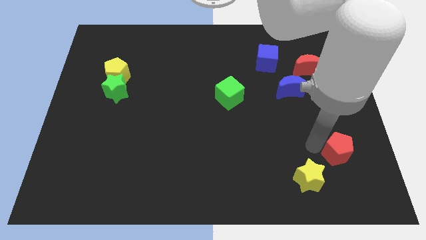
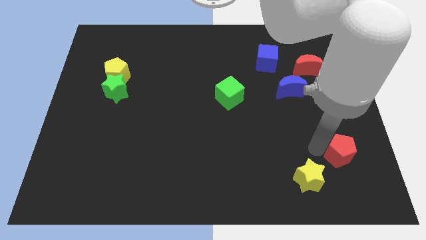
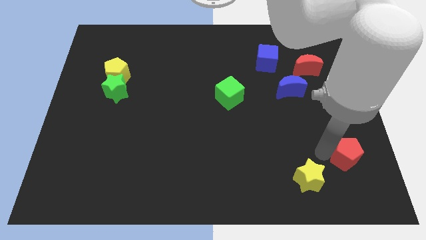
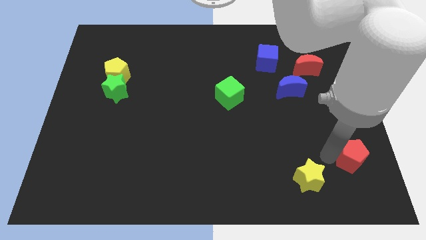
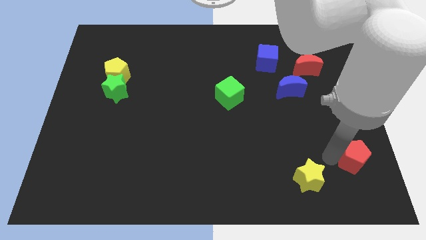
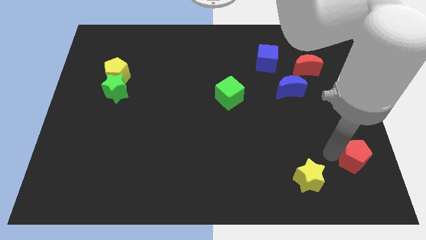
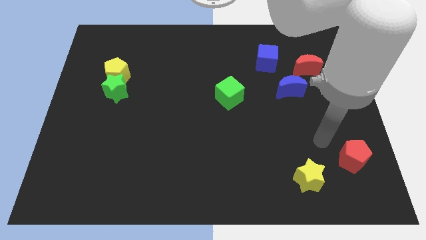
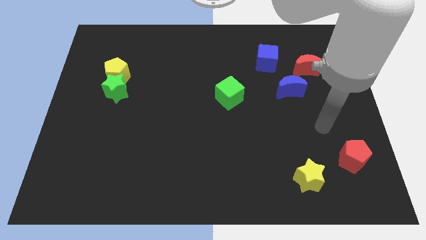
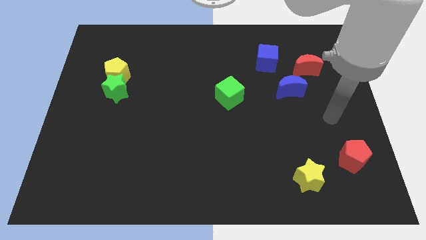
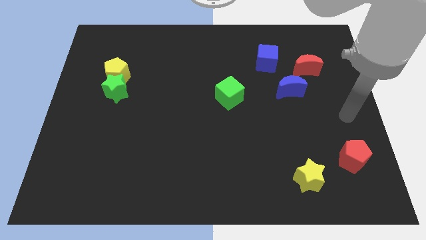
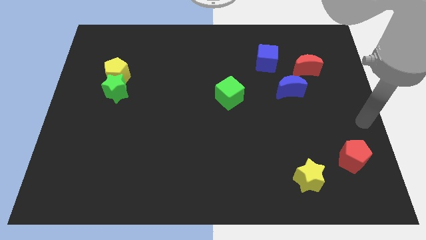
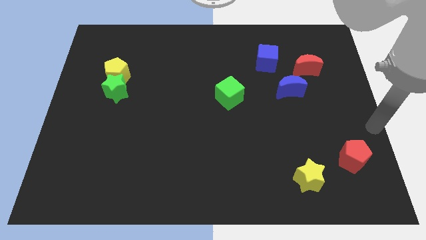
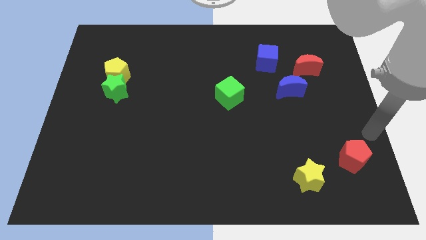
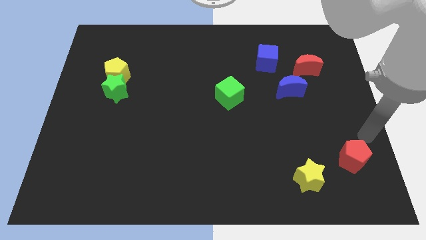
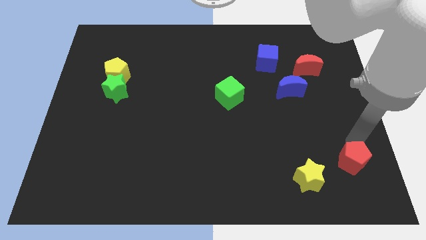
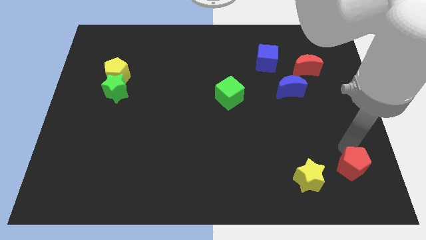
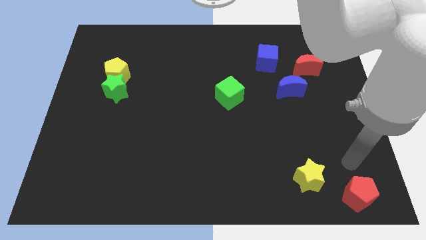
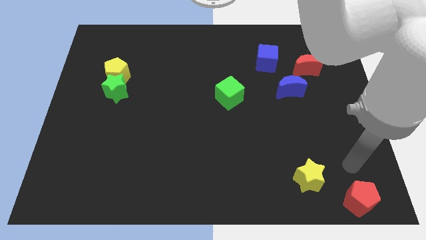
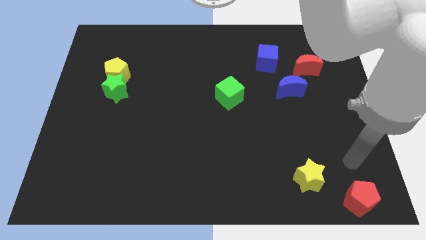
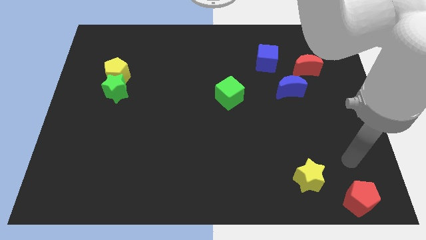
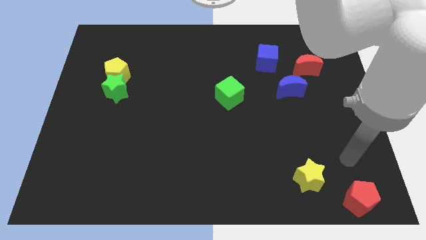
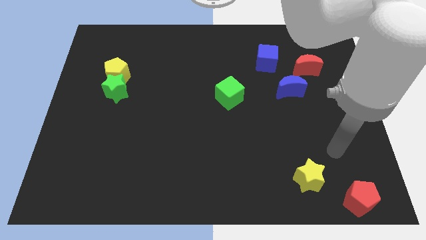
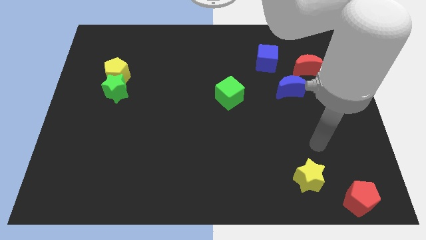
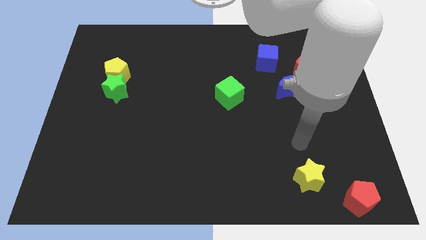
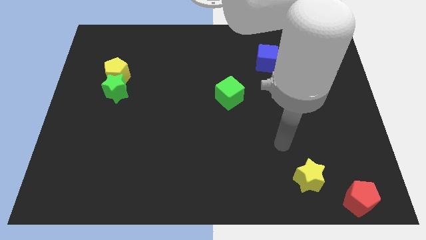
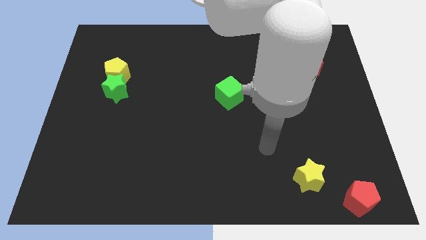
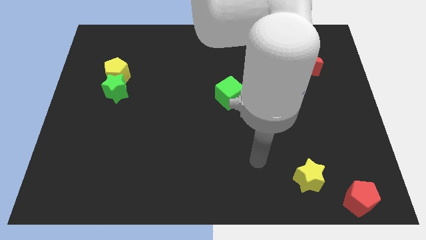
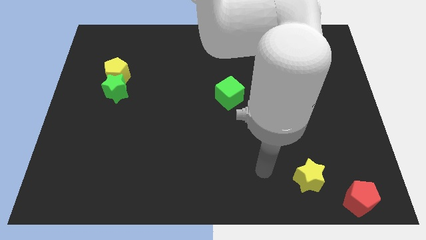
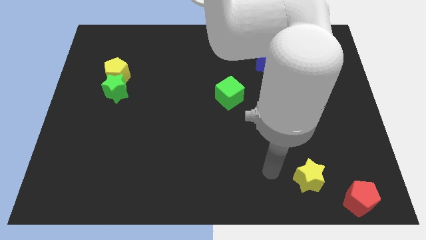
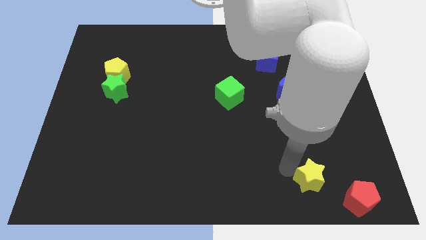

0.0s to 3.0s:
push the red pentagon towards the bottom side of the board

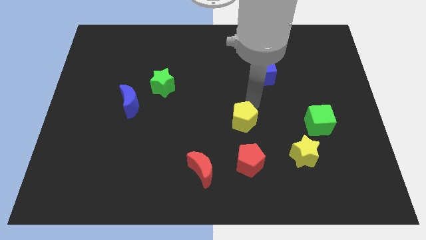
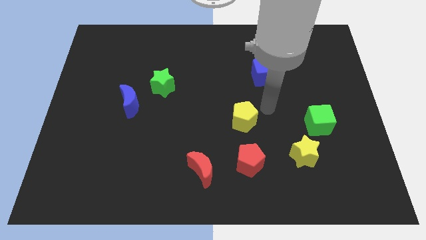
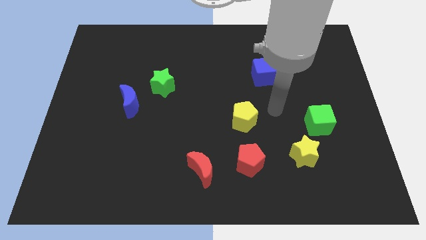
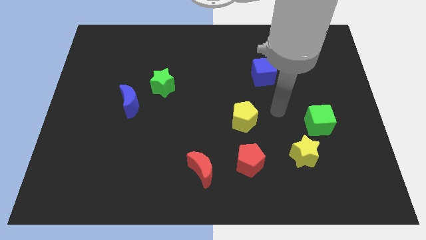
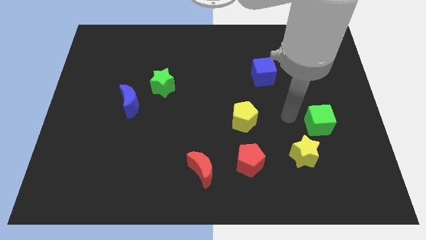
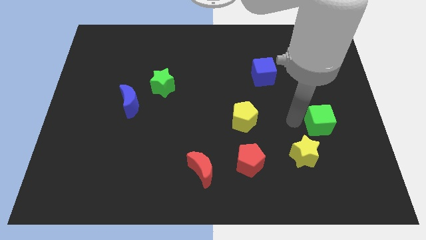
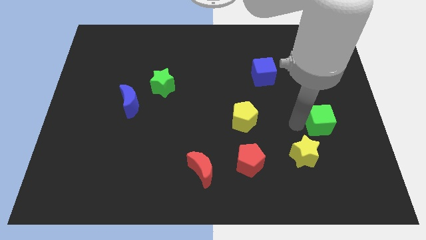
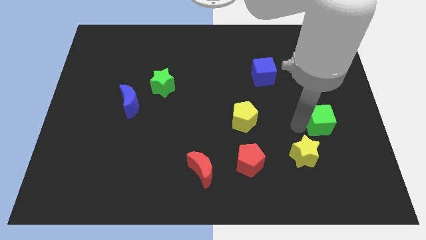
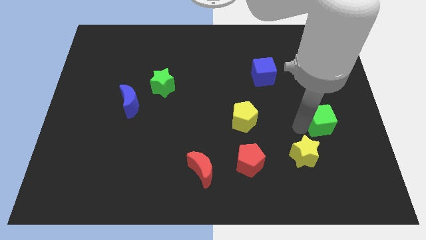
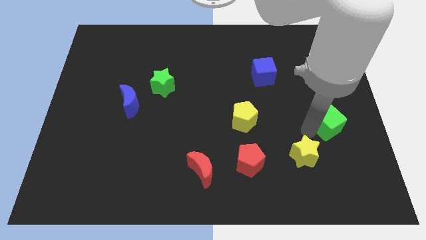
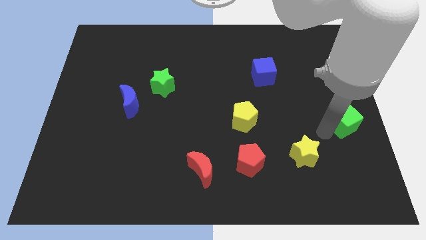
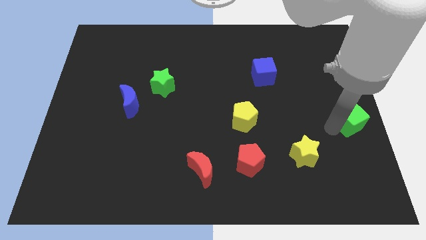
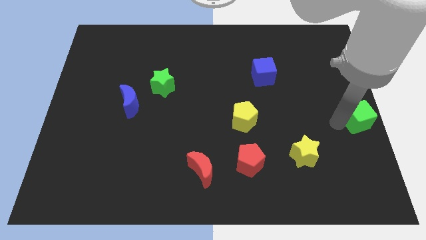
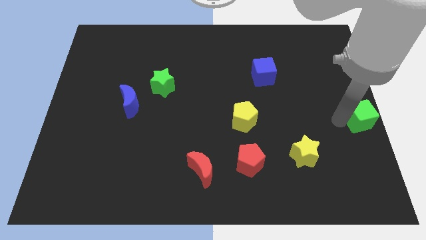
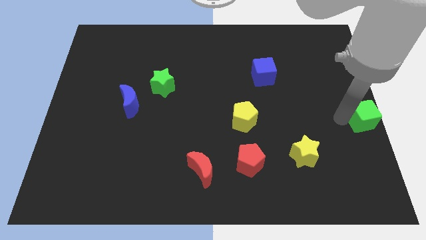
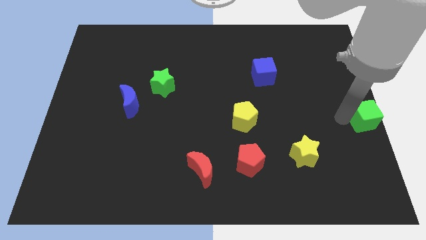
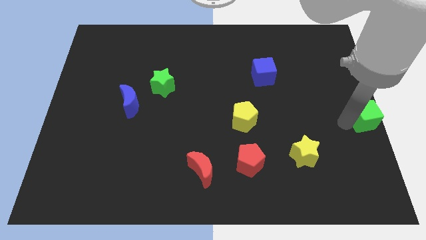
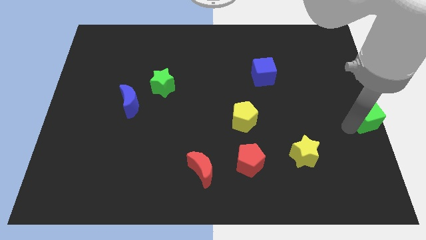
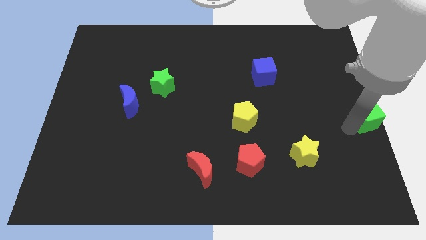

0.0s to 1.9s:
move the green cube to the center right of the board

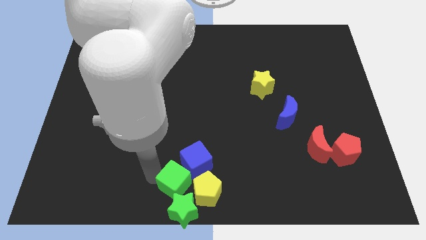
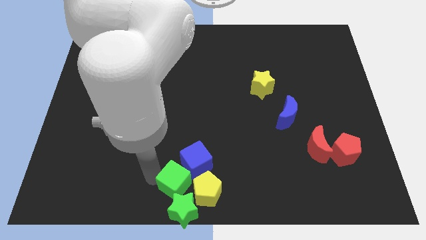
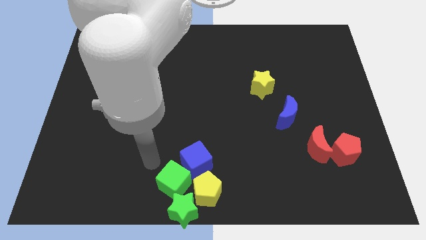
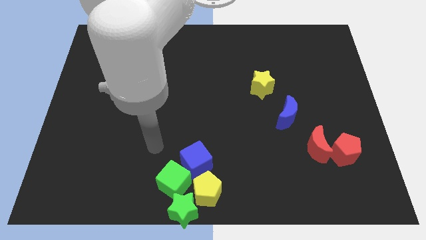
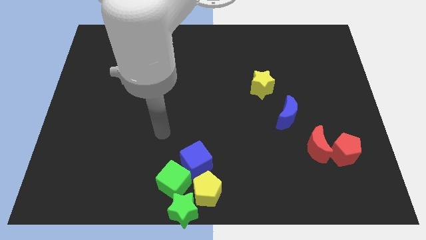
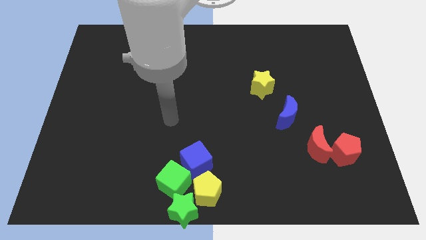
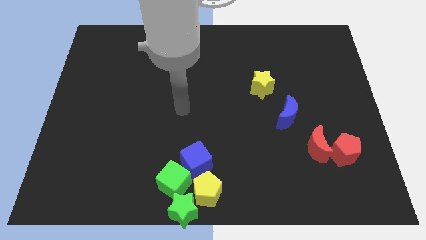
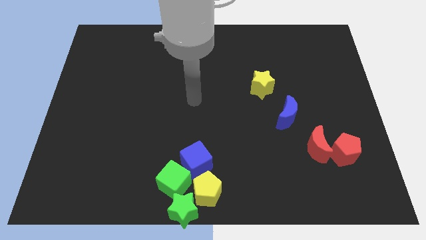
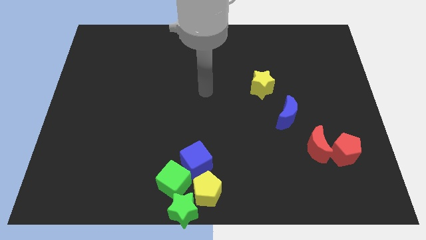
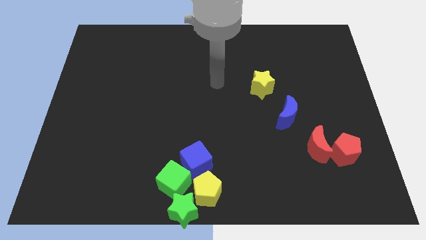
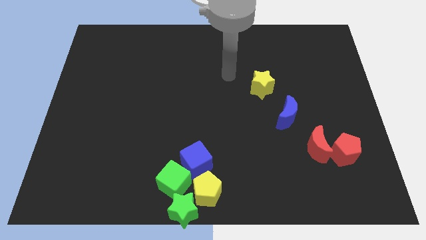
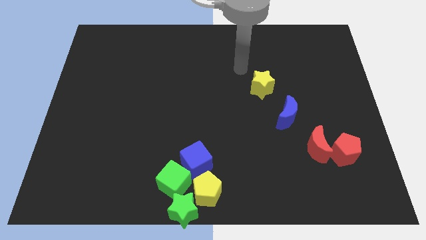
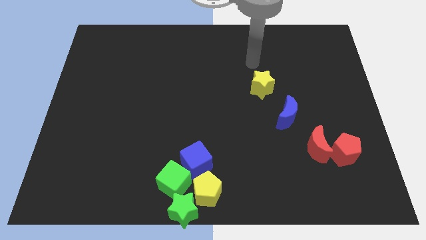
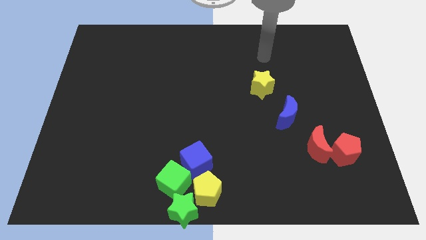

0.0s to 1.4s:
move the arm away from the green cube

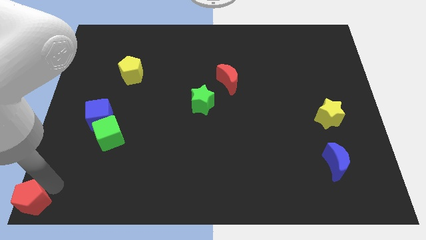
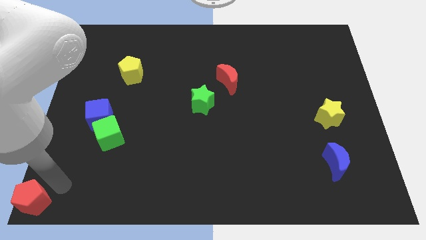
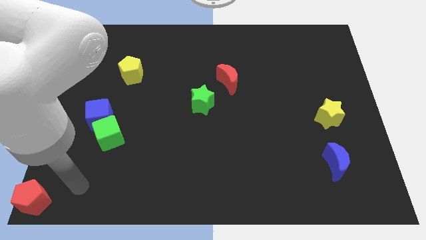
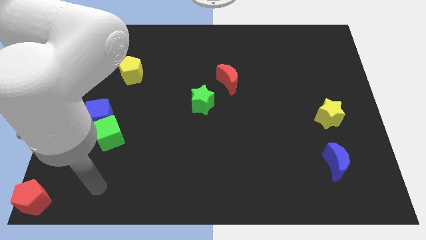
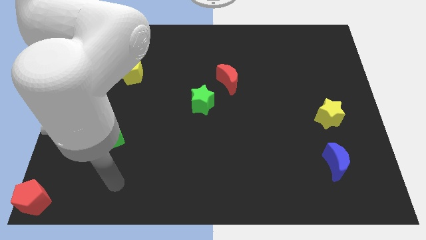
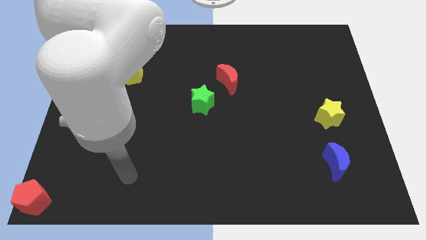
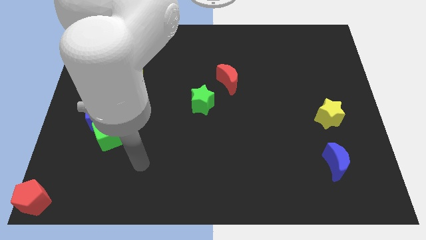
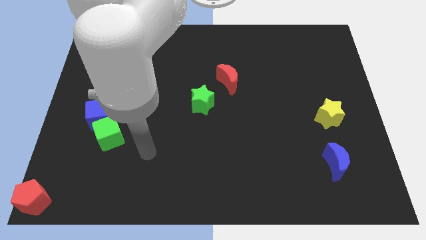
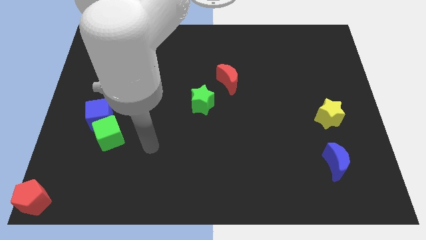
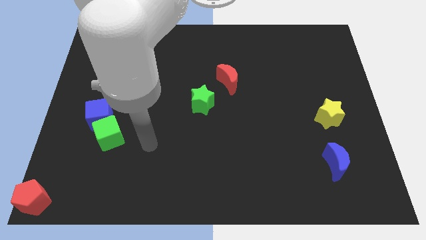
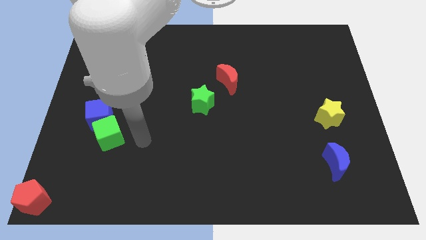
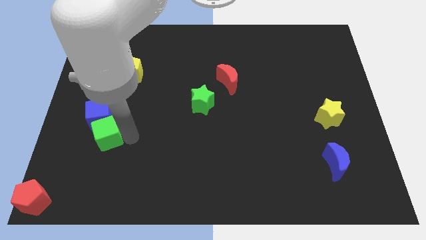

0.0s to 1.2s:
place your arm to the right of the green cube

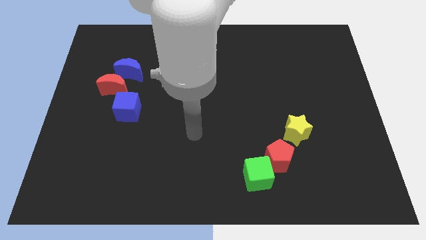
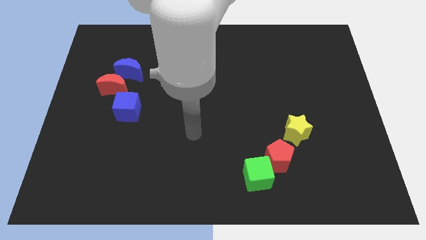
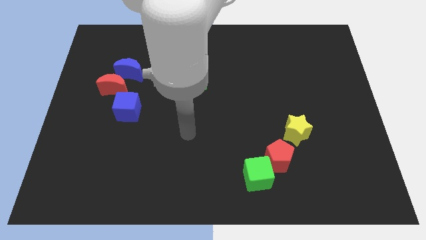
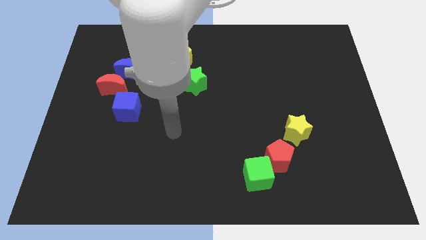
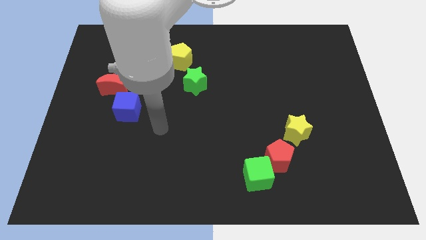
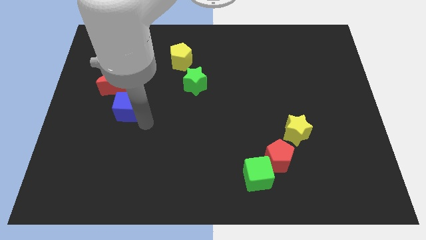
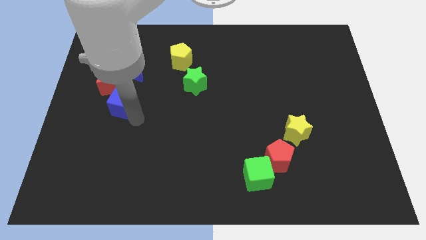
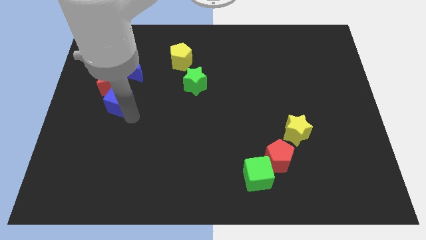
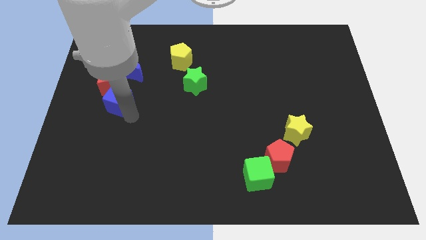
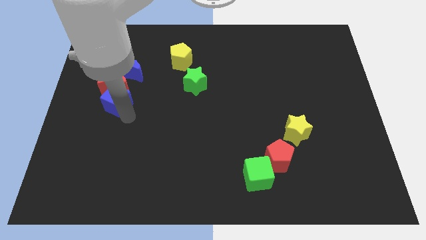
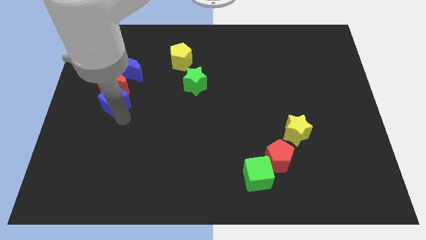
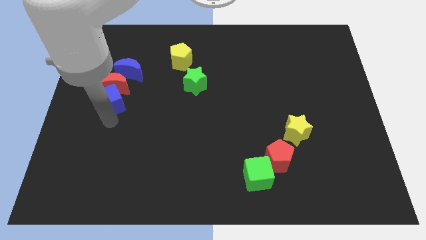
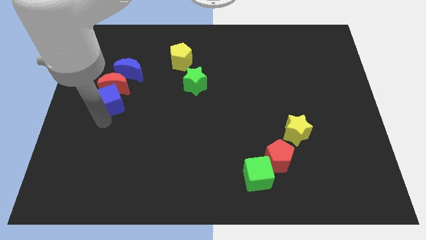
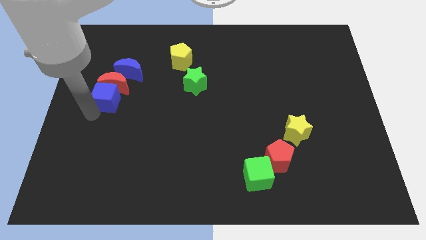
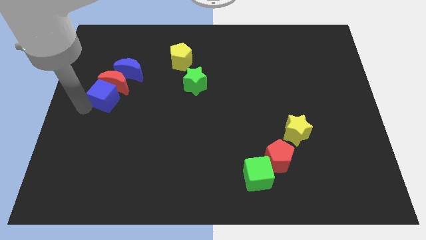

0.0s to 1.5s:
move the blue cube into the red crescent

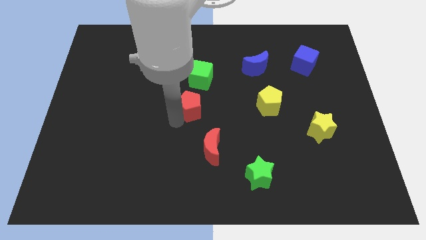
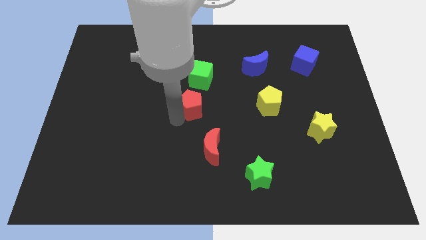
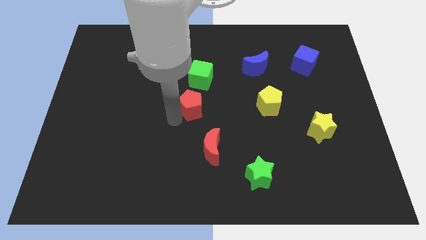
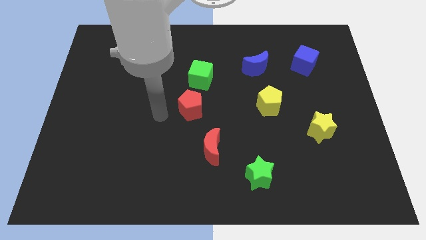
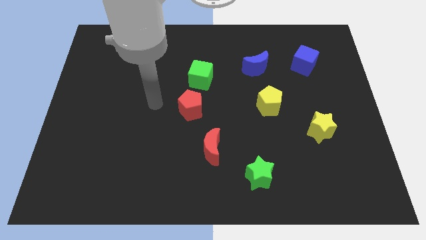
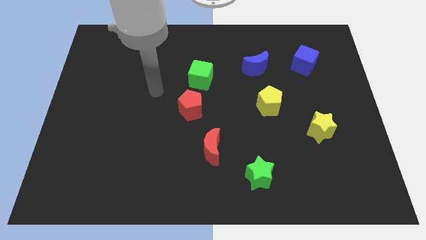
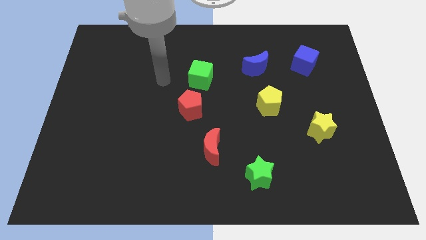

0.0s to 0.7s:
place the red pentagon below the green cube
